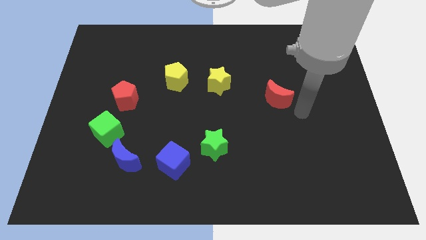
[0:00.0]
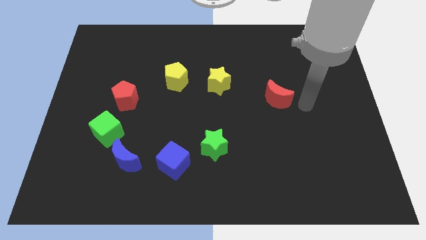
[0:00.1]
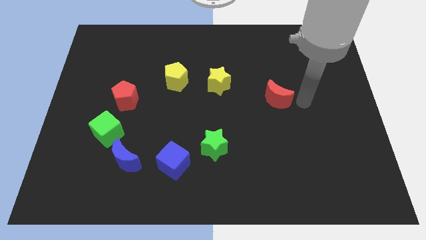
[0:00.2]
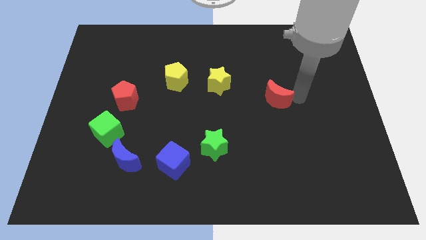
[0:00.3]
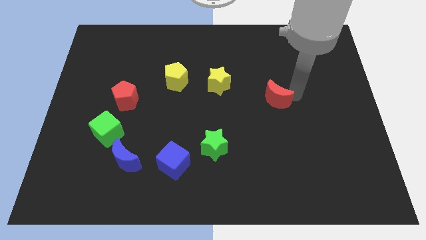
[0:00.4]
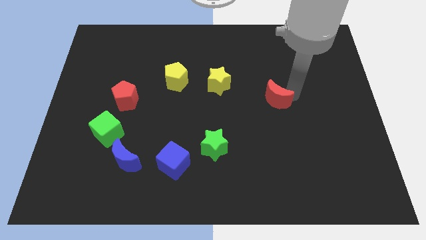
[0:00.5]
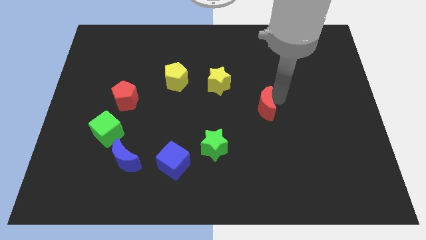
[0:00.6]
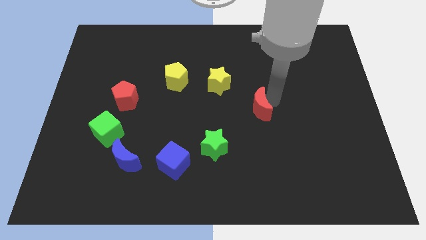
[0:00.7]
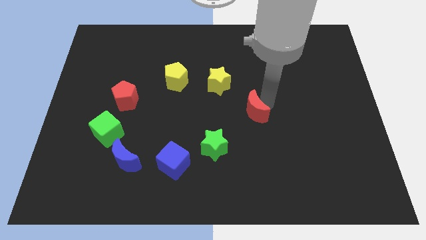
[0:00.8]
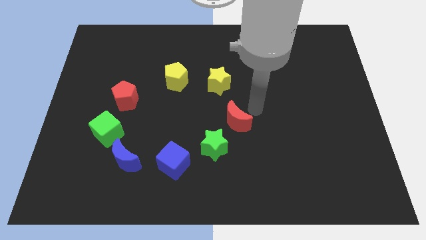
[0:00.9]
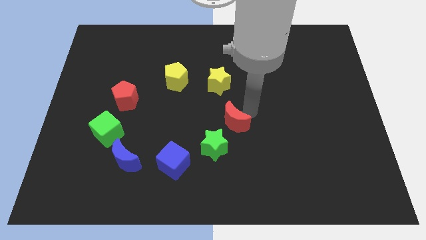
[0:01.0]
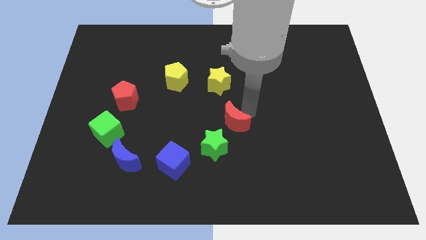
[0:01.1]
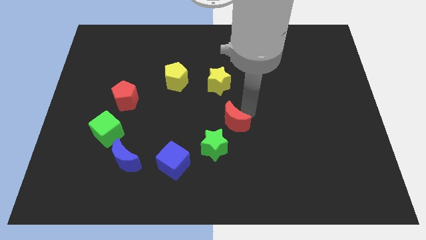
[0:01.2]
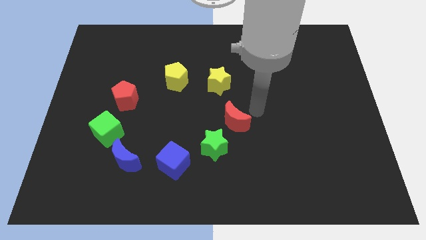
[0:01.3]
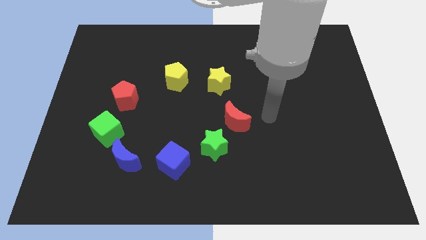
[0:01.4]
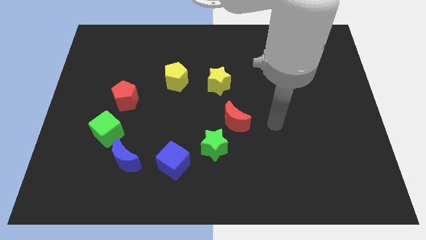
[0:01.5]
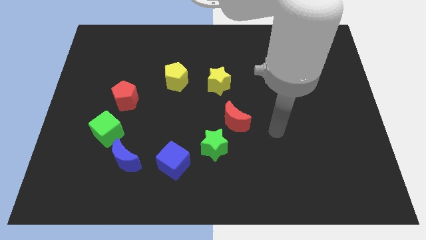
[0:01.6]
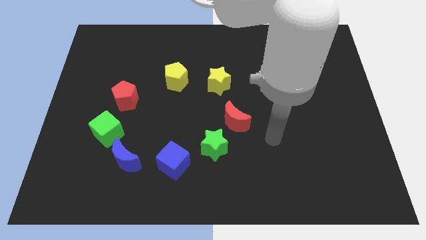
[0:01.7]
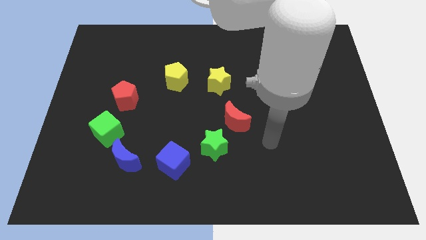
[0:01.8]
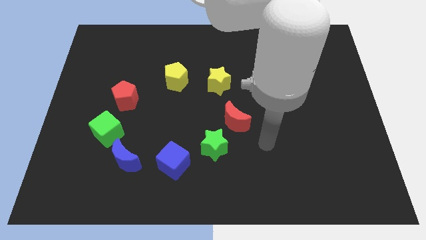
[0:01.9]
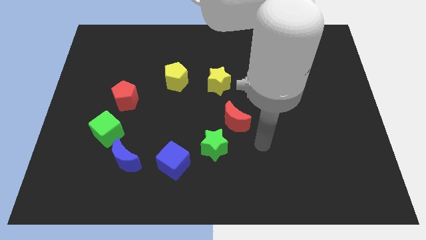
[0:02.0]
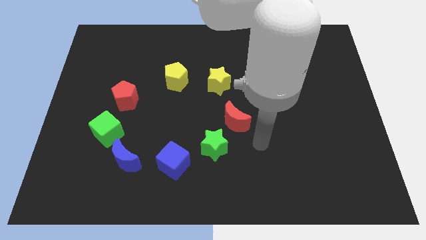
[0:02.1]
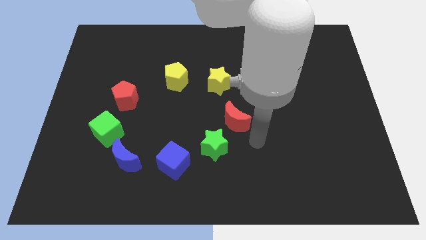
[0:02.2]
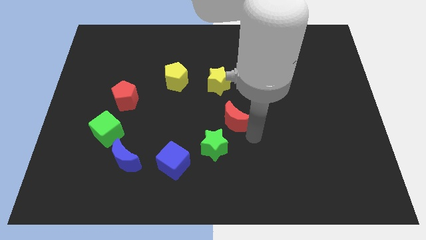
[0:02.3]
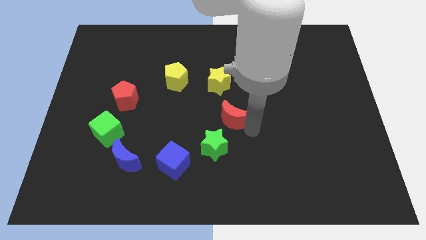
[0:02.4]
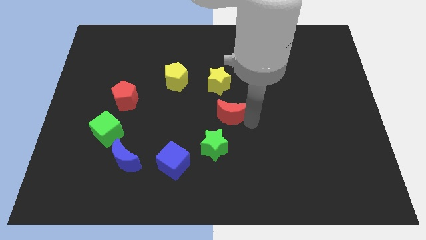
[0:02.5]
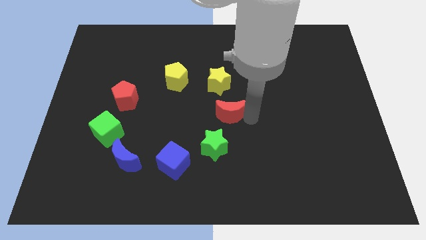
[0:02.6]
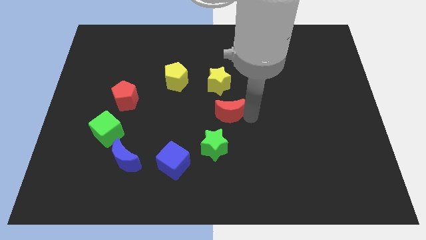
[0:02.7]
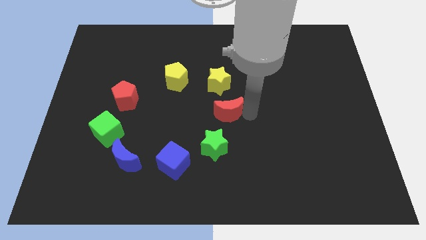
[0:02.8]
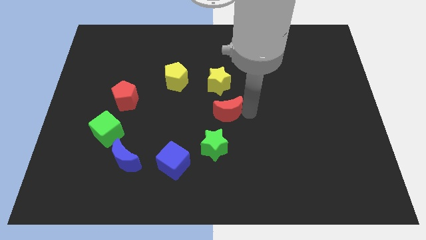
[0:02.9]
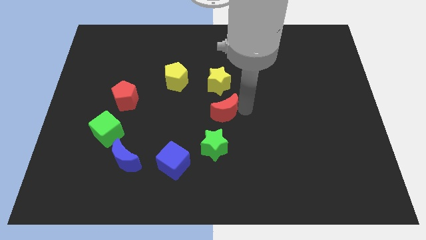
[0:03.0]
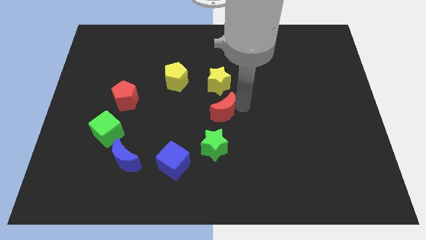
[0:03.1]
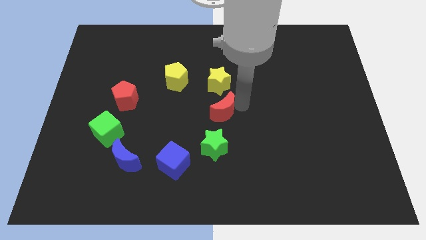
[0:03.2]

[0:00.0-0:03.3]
place the red crescent in between the yellow and green star vertically

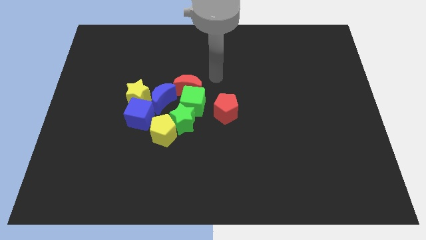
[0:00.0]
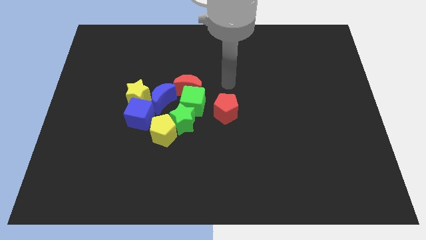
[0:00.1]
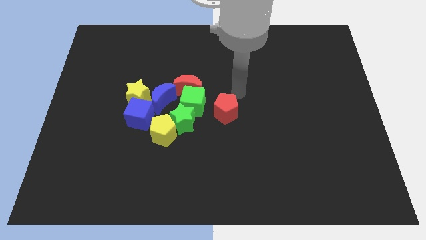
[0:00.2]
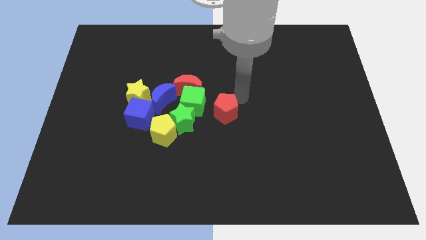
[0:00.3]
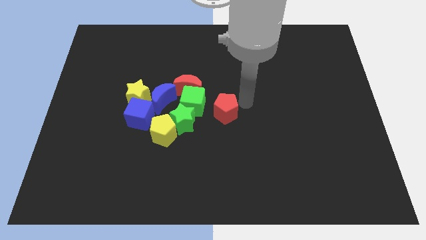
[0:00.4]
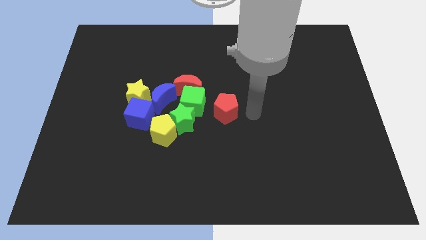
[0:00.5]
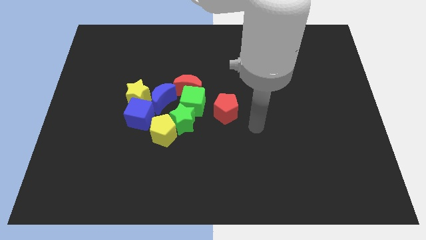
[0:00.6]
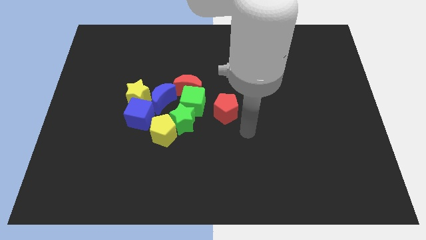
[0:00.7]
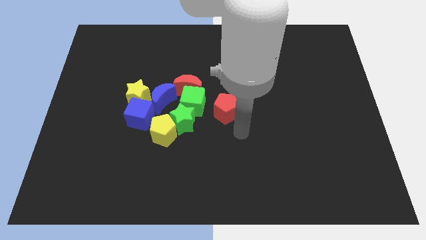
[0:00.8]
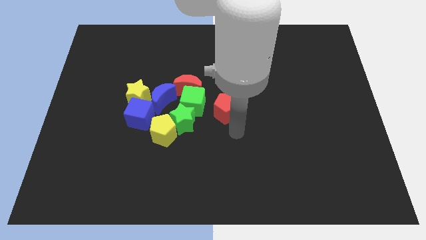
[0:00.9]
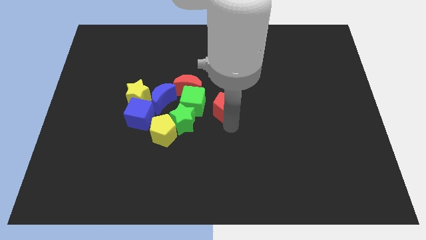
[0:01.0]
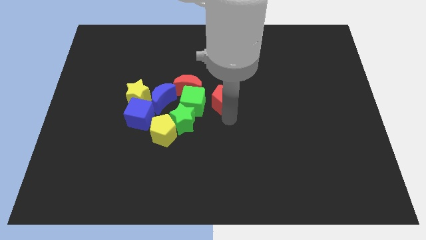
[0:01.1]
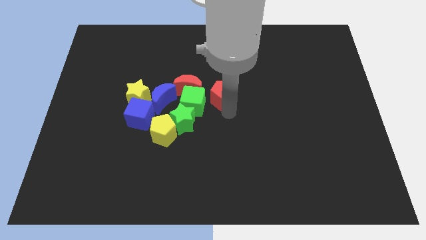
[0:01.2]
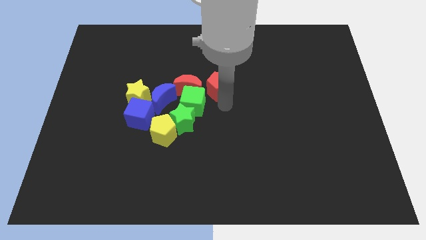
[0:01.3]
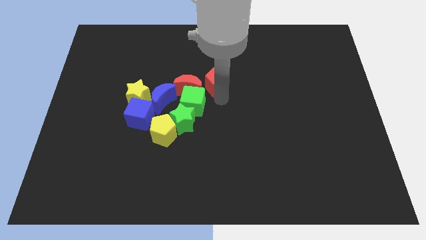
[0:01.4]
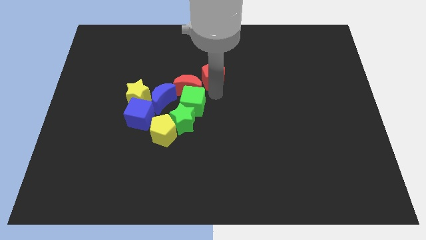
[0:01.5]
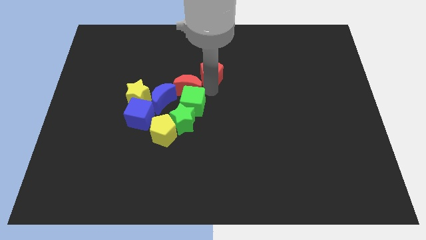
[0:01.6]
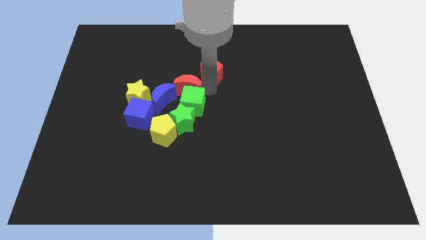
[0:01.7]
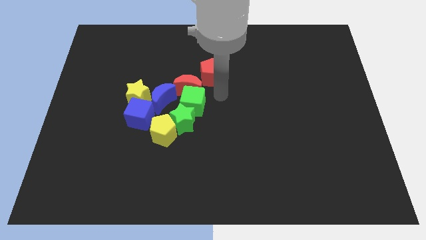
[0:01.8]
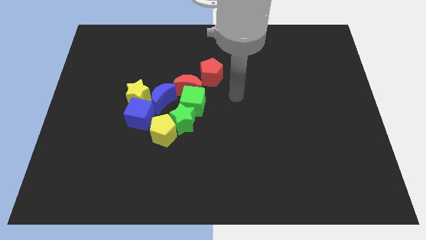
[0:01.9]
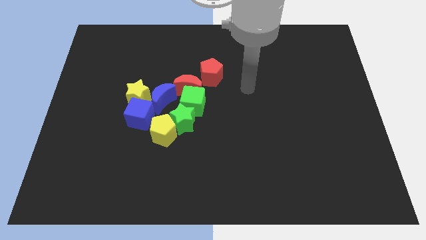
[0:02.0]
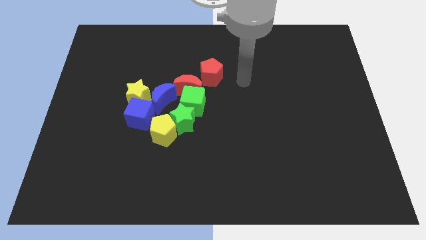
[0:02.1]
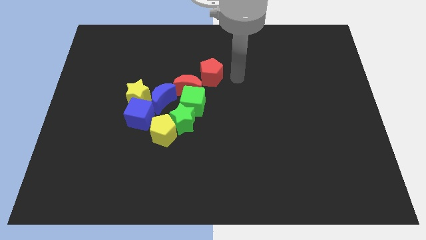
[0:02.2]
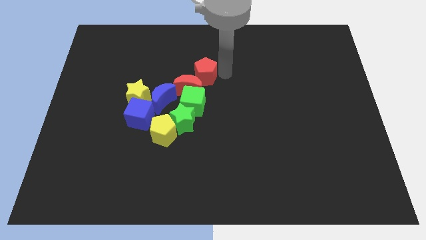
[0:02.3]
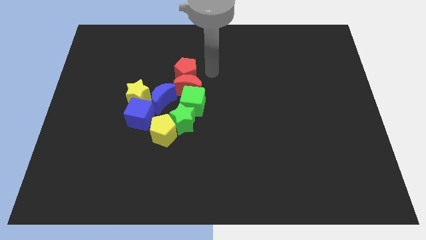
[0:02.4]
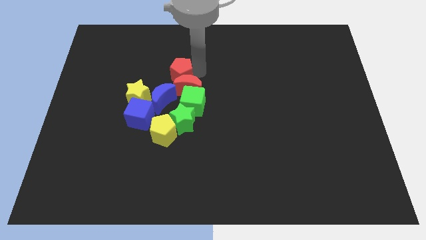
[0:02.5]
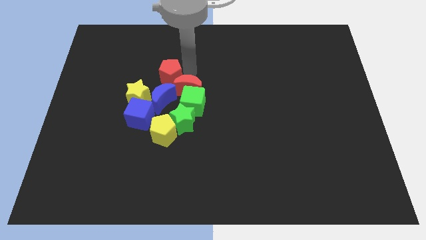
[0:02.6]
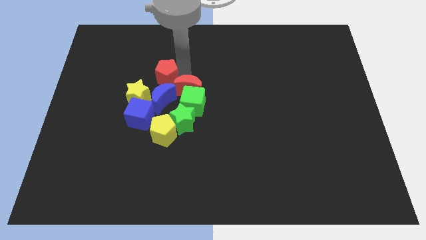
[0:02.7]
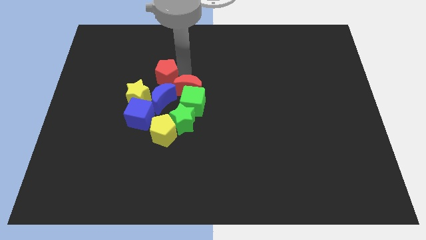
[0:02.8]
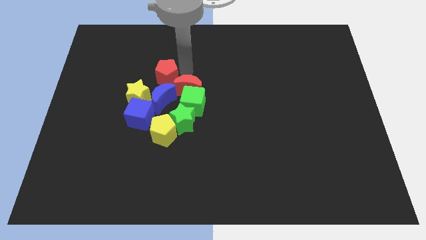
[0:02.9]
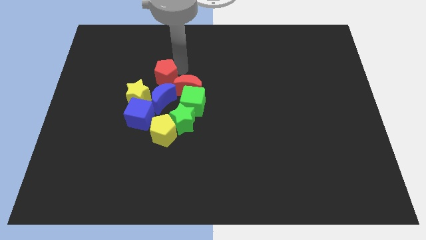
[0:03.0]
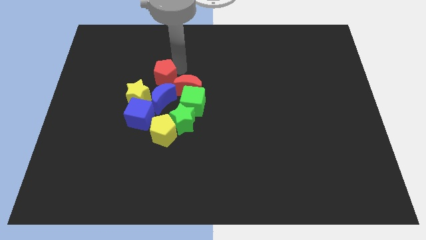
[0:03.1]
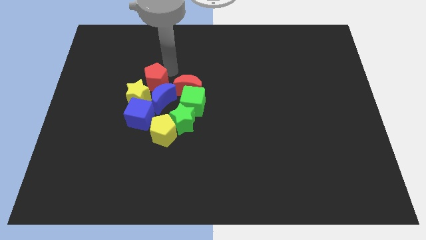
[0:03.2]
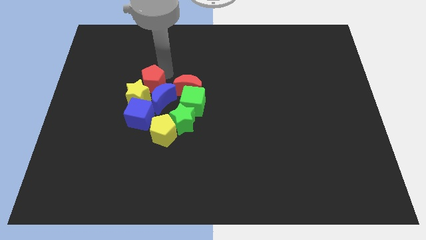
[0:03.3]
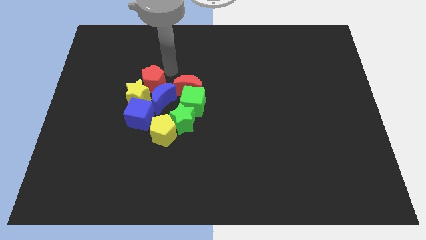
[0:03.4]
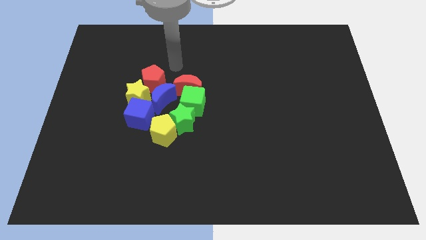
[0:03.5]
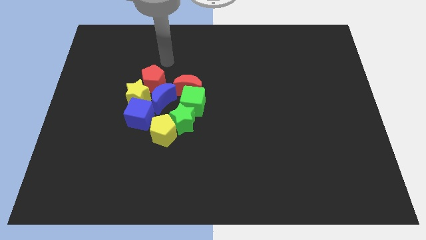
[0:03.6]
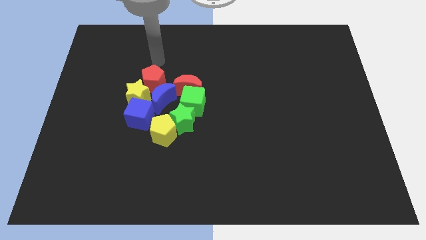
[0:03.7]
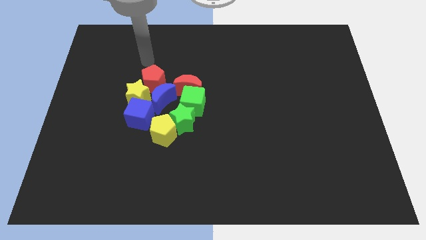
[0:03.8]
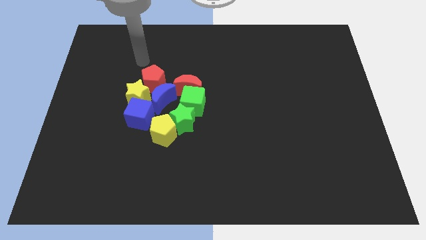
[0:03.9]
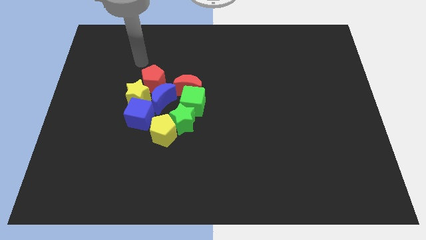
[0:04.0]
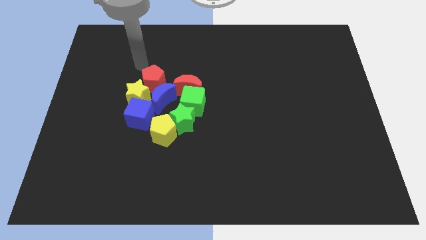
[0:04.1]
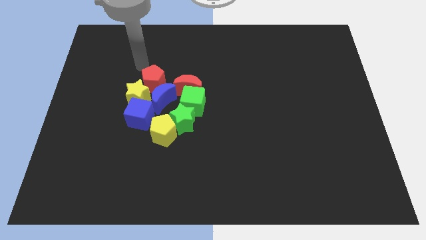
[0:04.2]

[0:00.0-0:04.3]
place red pentagon in between yellow star and red moon

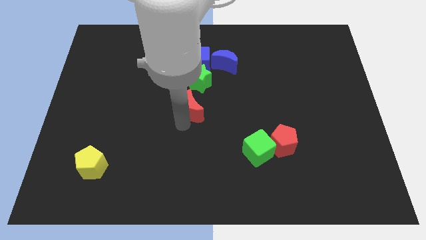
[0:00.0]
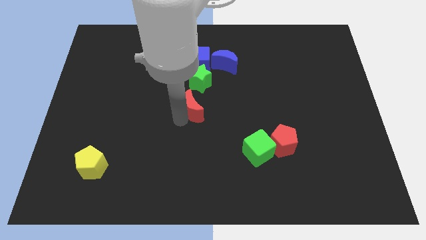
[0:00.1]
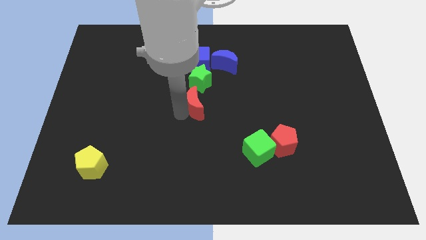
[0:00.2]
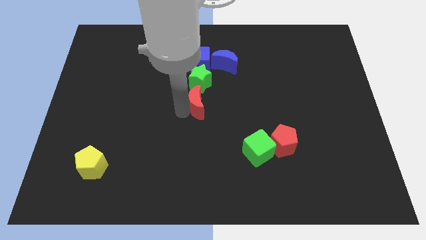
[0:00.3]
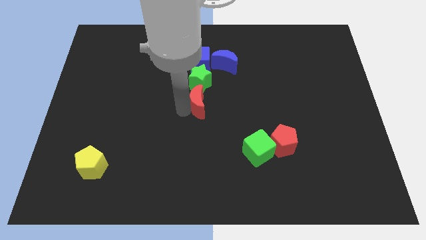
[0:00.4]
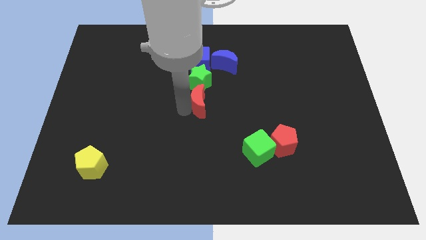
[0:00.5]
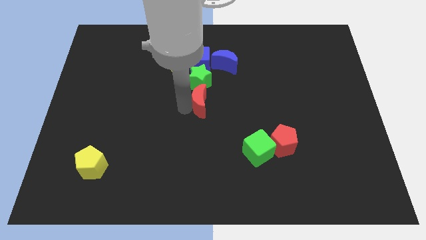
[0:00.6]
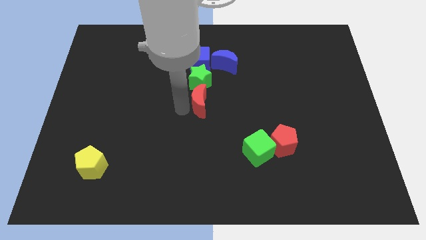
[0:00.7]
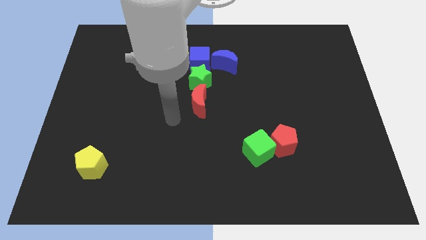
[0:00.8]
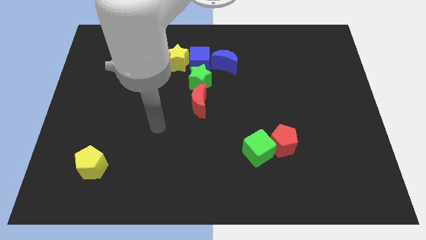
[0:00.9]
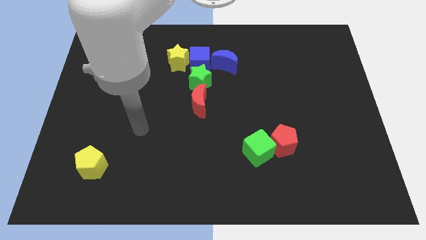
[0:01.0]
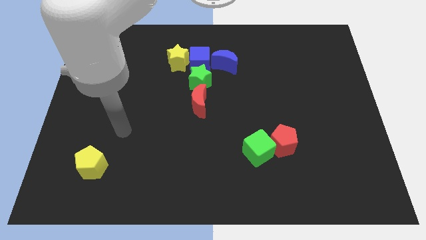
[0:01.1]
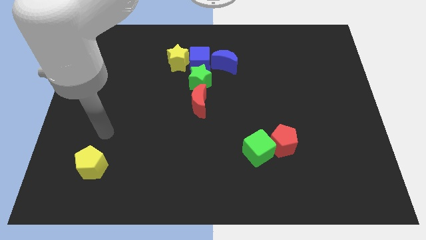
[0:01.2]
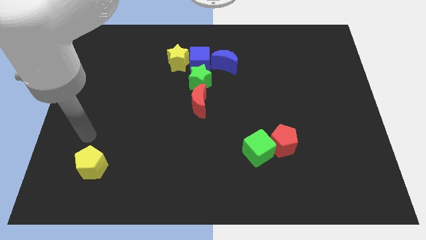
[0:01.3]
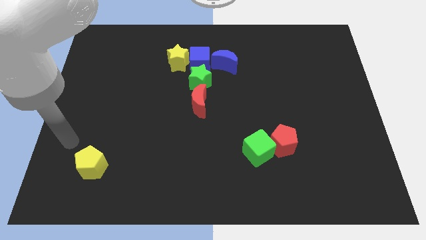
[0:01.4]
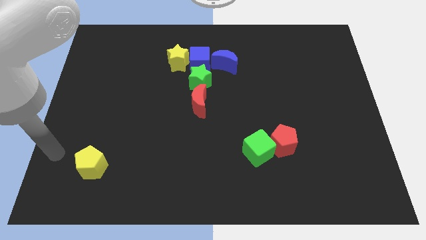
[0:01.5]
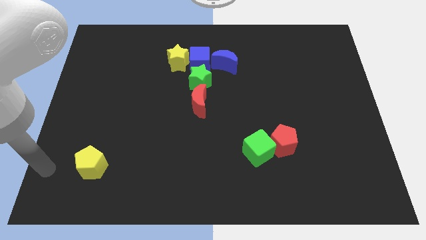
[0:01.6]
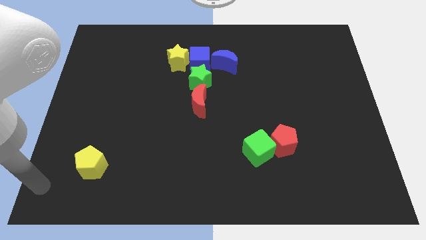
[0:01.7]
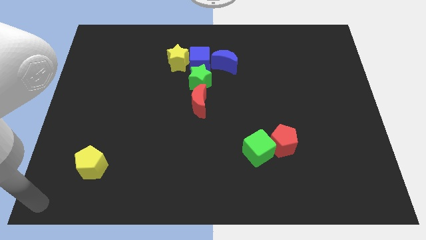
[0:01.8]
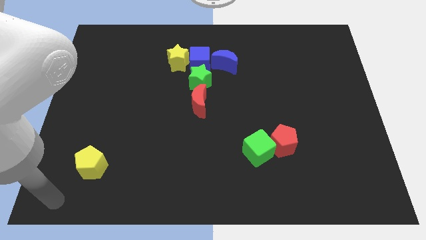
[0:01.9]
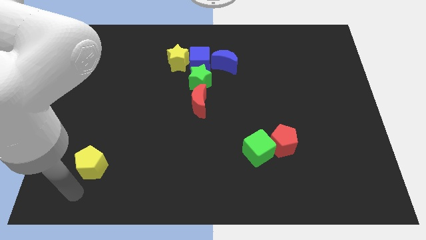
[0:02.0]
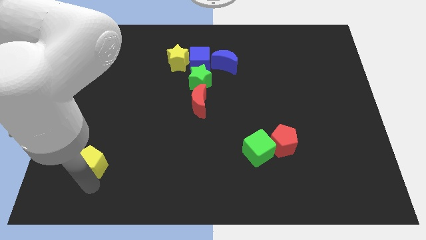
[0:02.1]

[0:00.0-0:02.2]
place the arm behind the yellow pentagon
